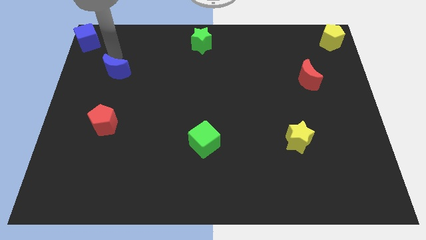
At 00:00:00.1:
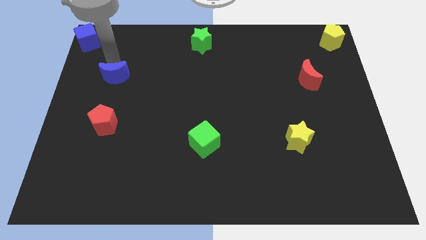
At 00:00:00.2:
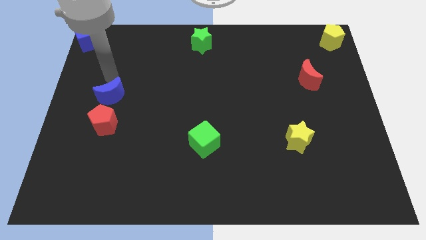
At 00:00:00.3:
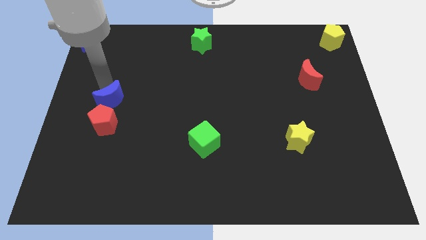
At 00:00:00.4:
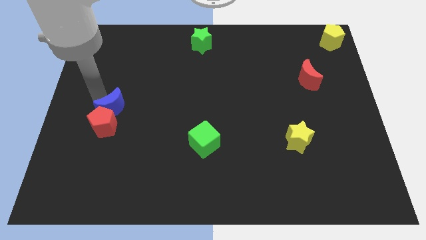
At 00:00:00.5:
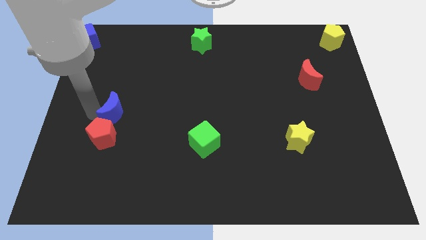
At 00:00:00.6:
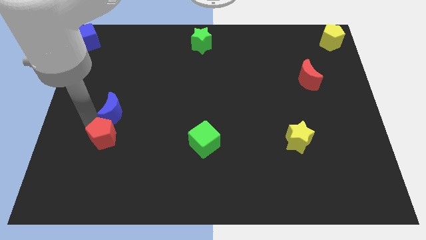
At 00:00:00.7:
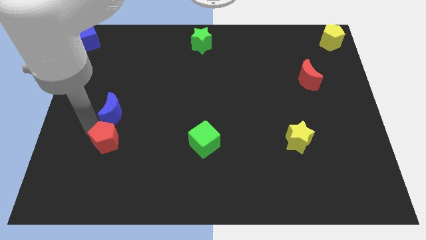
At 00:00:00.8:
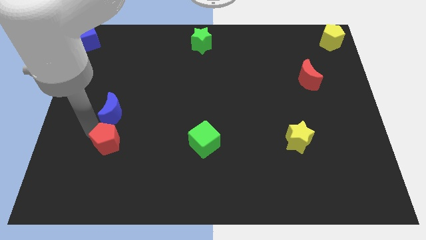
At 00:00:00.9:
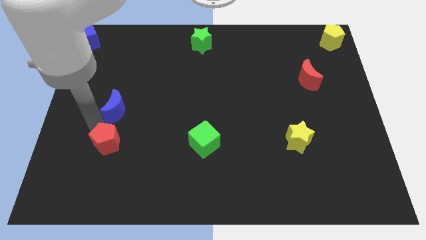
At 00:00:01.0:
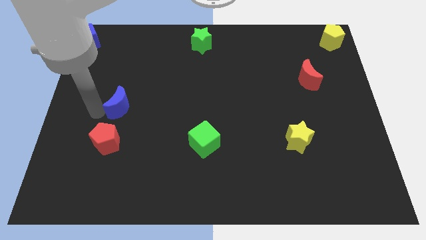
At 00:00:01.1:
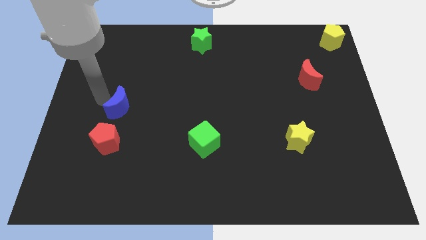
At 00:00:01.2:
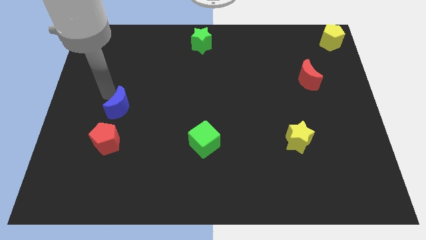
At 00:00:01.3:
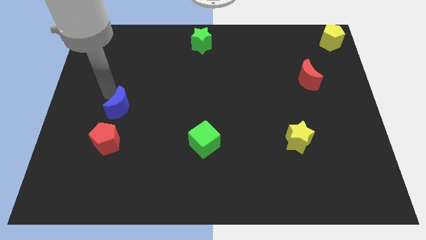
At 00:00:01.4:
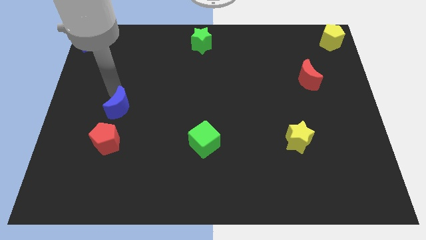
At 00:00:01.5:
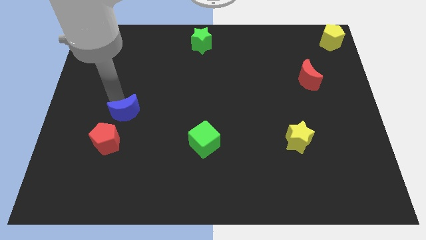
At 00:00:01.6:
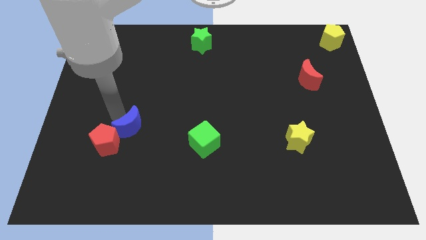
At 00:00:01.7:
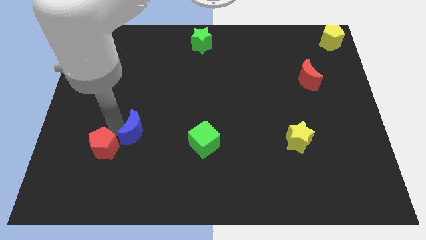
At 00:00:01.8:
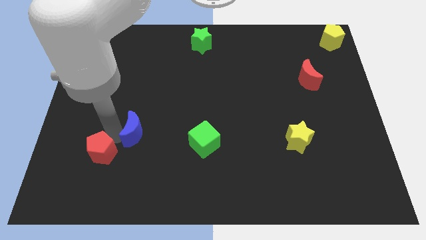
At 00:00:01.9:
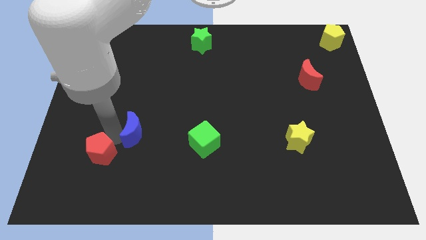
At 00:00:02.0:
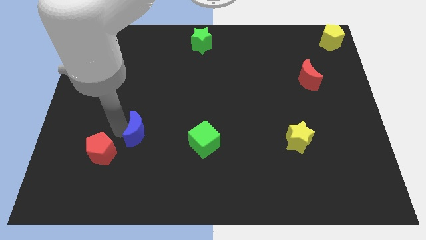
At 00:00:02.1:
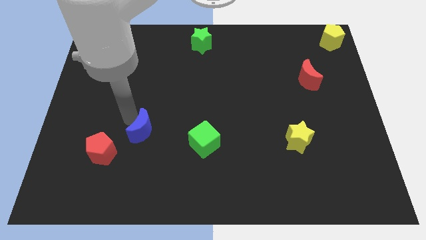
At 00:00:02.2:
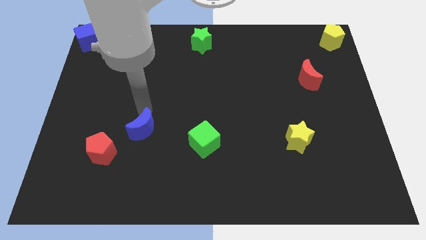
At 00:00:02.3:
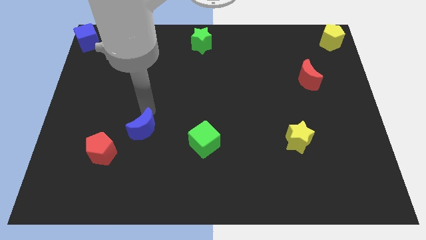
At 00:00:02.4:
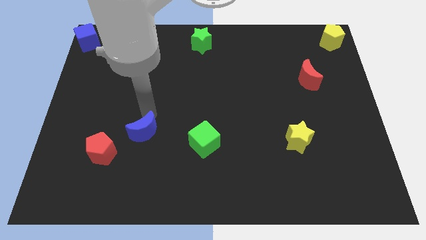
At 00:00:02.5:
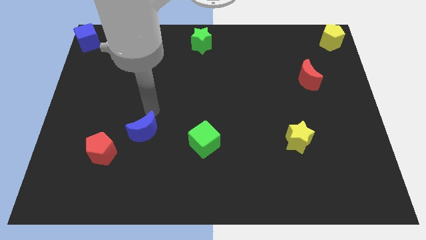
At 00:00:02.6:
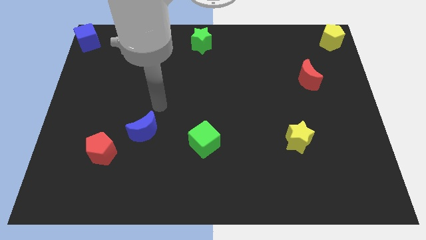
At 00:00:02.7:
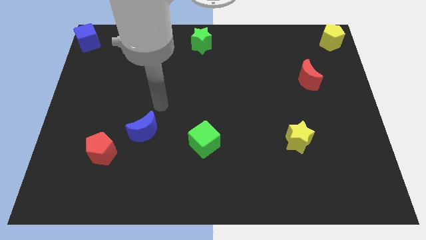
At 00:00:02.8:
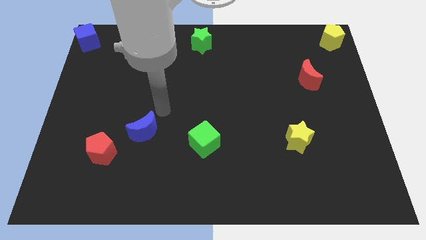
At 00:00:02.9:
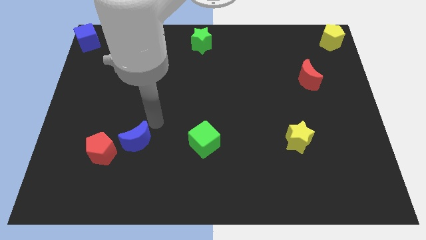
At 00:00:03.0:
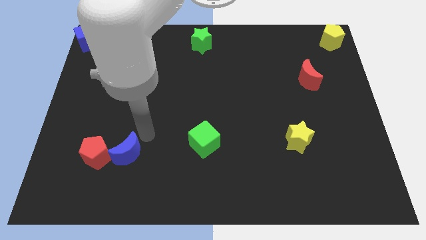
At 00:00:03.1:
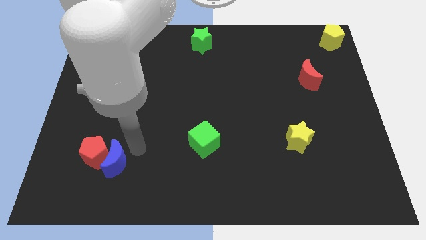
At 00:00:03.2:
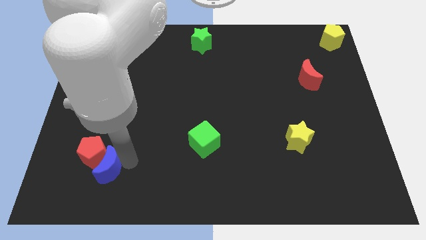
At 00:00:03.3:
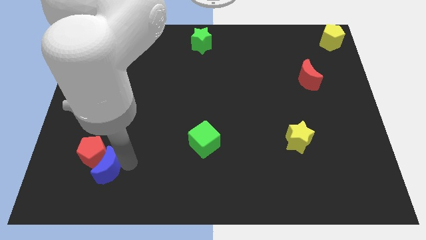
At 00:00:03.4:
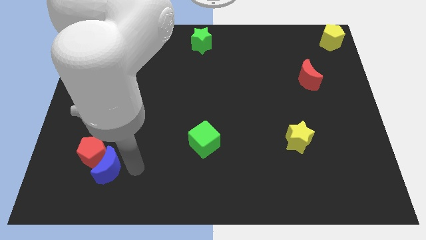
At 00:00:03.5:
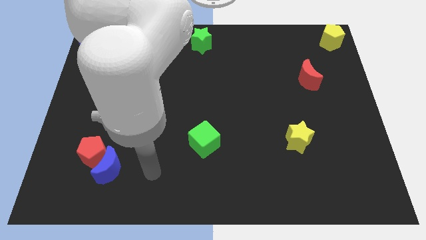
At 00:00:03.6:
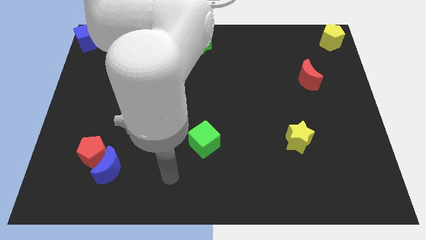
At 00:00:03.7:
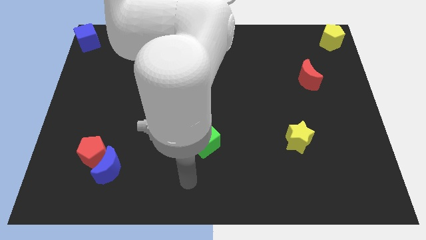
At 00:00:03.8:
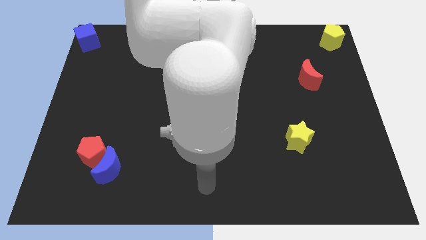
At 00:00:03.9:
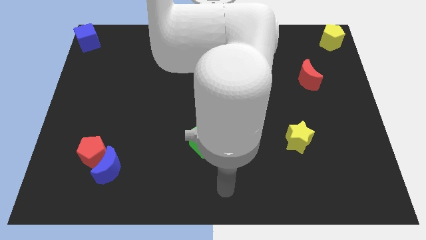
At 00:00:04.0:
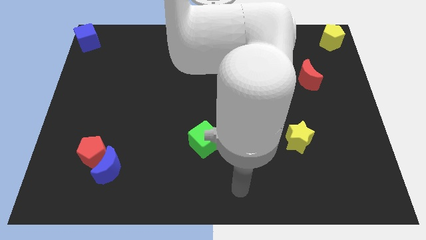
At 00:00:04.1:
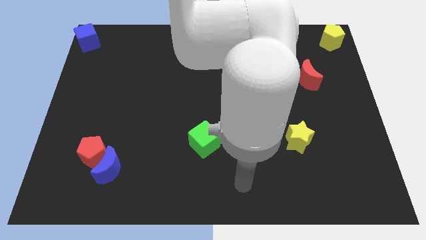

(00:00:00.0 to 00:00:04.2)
push the blue moon into the red pentagon

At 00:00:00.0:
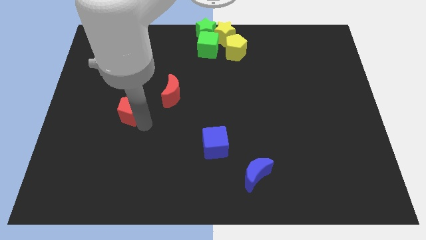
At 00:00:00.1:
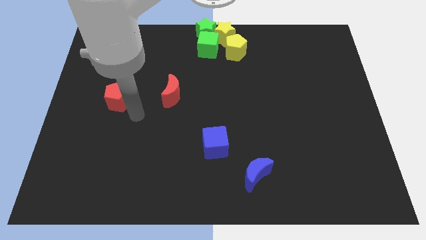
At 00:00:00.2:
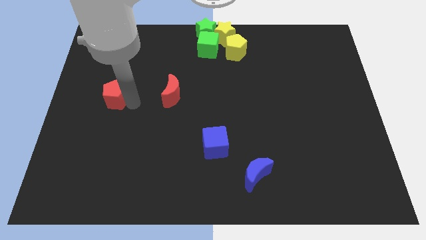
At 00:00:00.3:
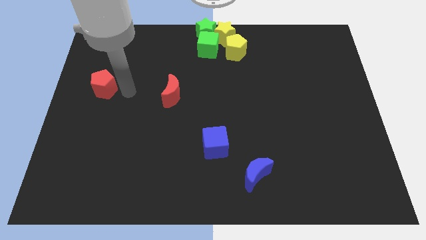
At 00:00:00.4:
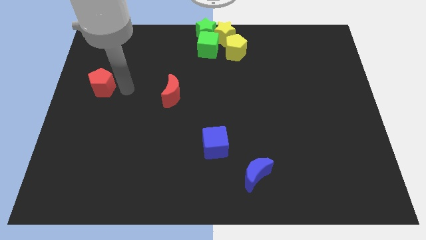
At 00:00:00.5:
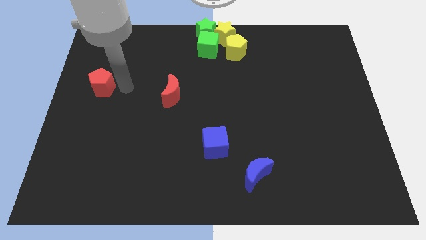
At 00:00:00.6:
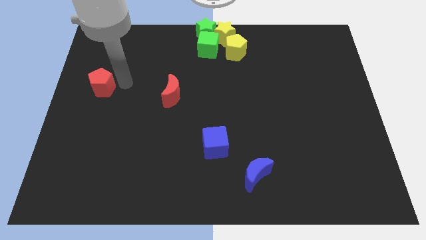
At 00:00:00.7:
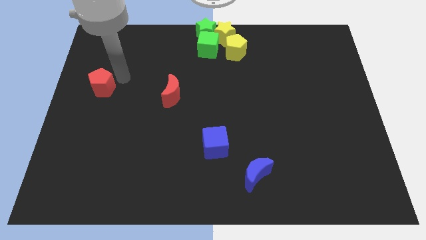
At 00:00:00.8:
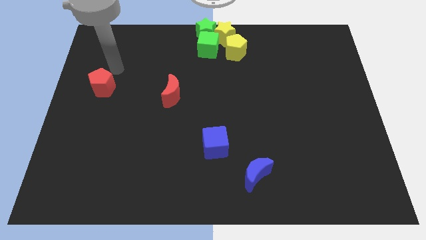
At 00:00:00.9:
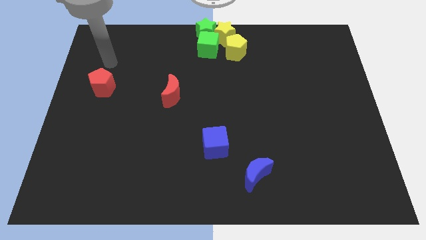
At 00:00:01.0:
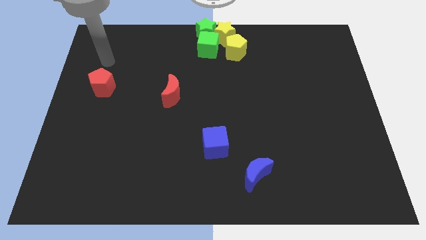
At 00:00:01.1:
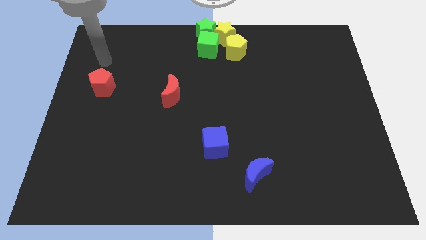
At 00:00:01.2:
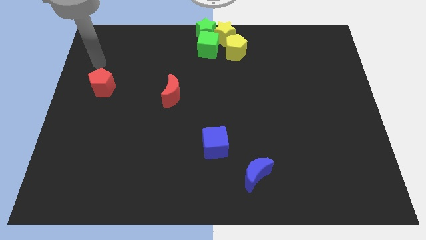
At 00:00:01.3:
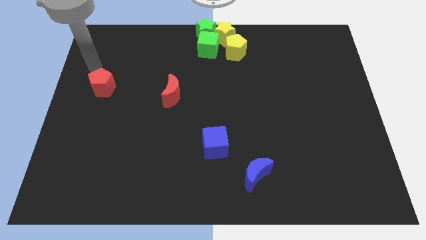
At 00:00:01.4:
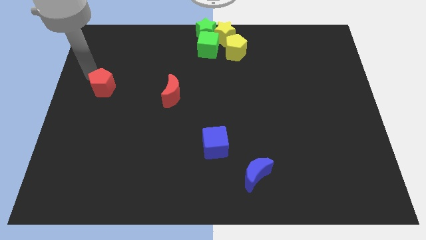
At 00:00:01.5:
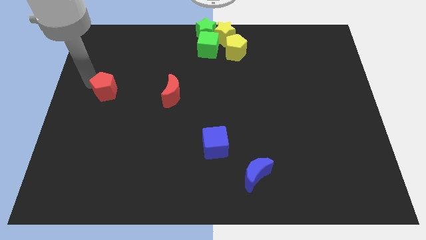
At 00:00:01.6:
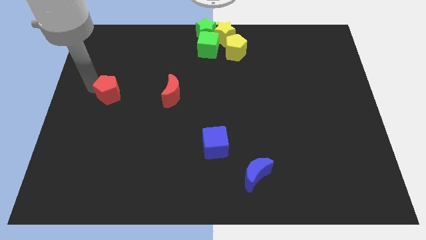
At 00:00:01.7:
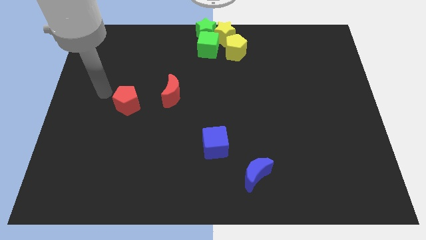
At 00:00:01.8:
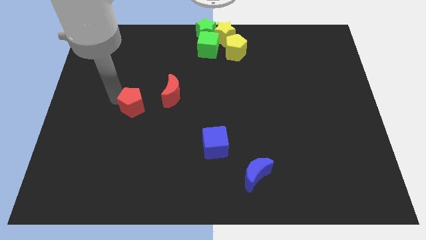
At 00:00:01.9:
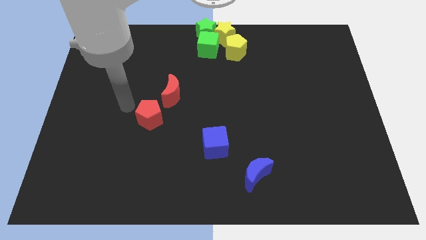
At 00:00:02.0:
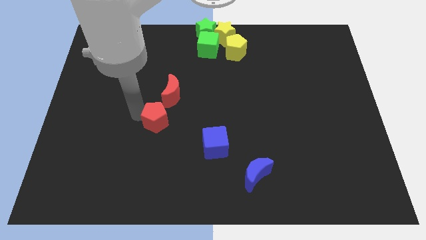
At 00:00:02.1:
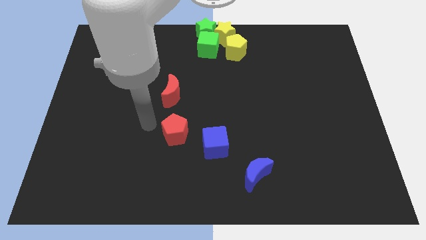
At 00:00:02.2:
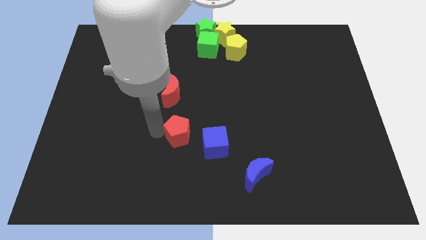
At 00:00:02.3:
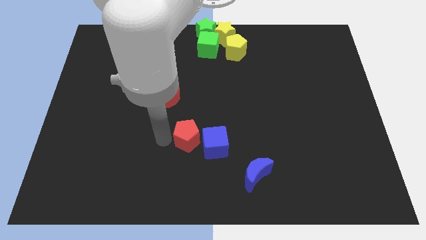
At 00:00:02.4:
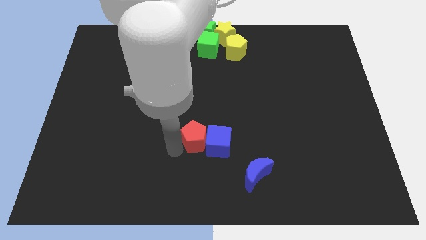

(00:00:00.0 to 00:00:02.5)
place the red pentagon to the left side of blue cube

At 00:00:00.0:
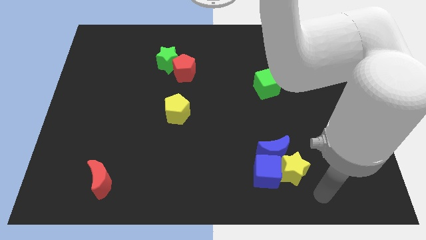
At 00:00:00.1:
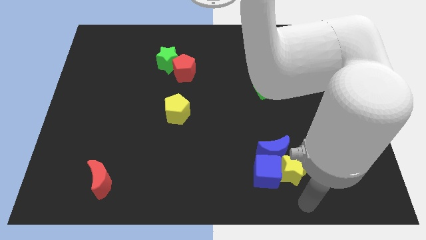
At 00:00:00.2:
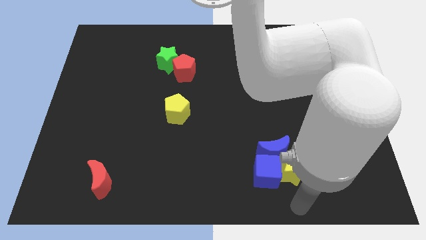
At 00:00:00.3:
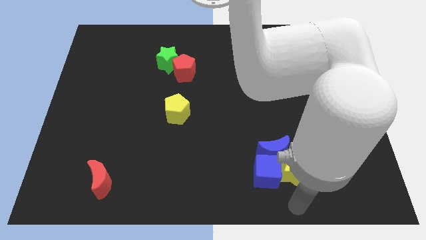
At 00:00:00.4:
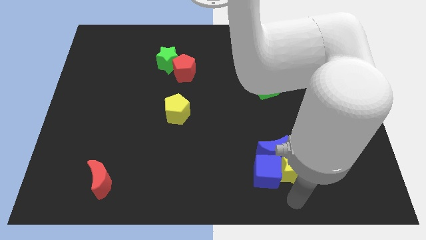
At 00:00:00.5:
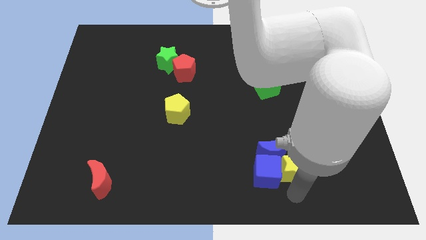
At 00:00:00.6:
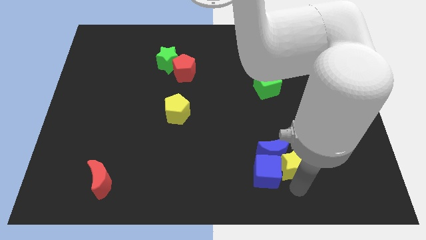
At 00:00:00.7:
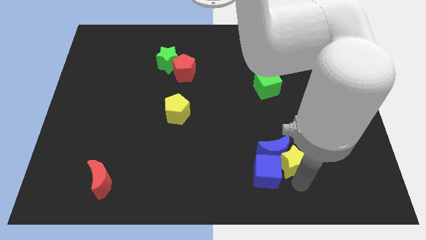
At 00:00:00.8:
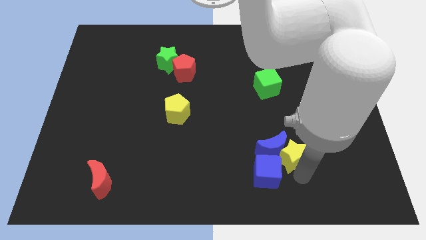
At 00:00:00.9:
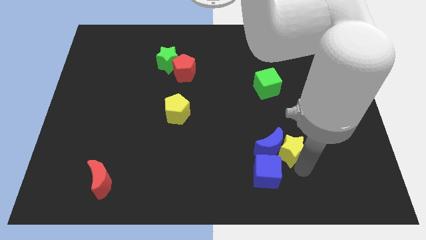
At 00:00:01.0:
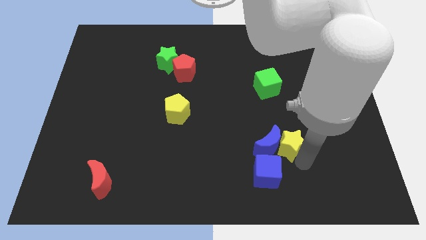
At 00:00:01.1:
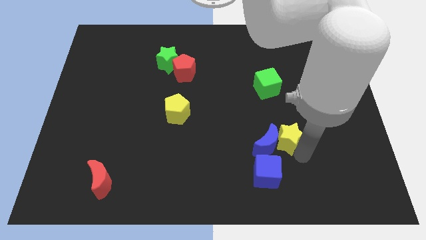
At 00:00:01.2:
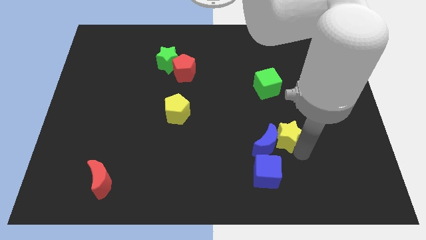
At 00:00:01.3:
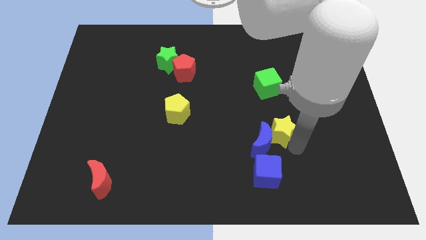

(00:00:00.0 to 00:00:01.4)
move the yellow star slightly up

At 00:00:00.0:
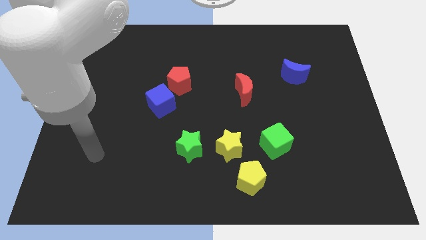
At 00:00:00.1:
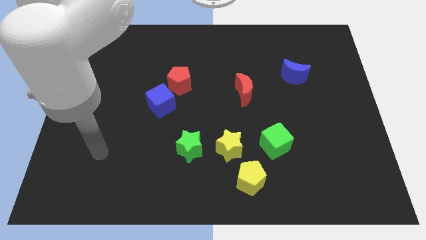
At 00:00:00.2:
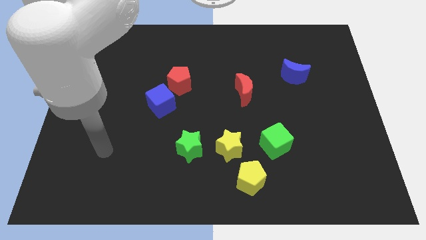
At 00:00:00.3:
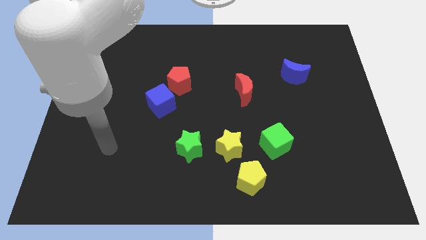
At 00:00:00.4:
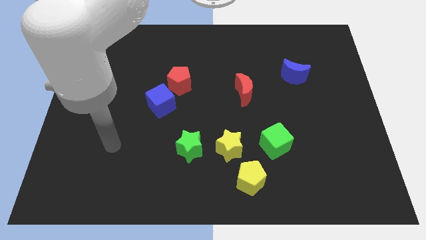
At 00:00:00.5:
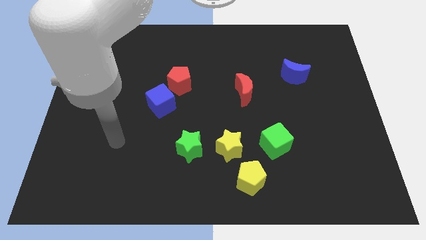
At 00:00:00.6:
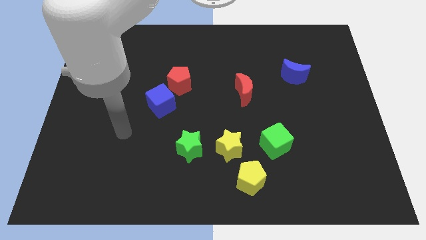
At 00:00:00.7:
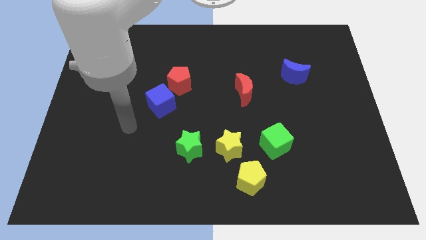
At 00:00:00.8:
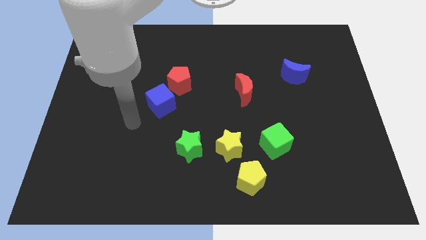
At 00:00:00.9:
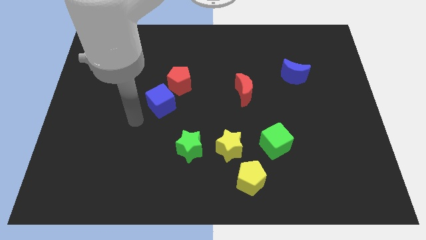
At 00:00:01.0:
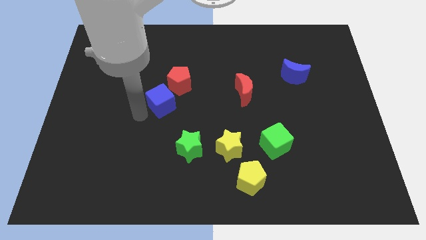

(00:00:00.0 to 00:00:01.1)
move arm near blue cube
